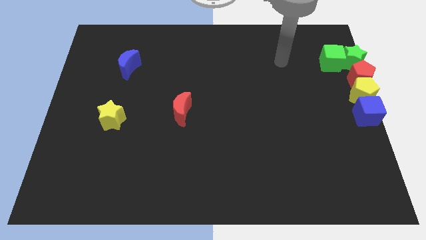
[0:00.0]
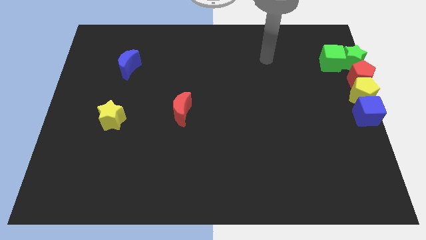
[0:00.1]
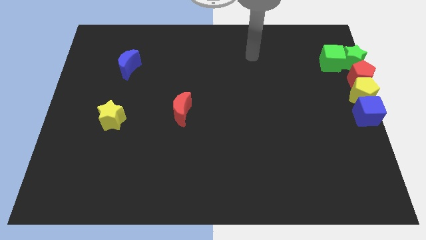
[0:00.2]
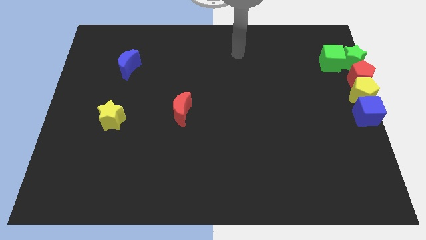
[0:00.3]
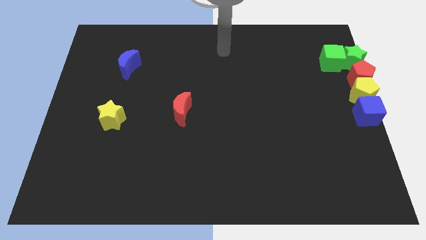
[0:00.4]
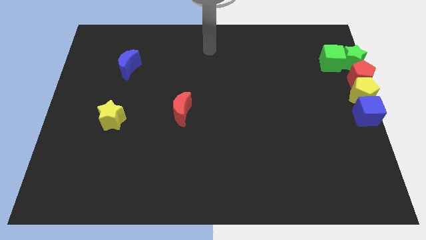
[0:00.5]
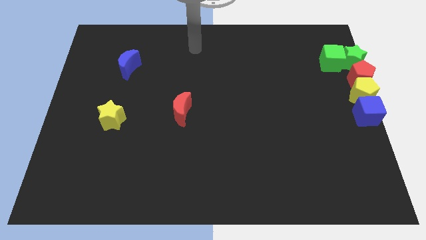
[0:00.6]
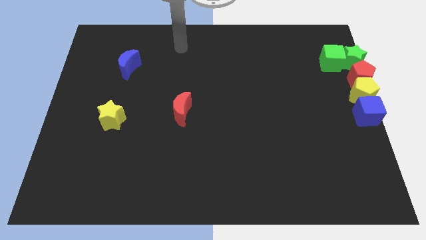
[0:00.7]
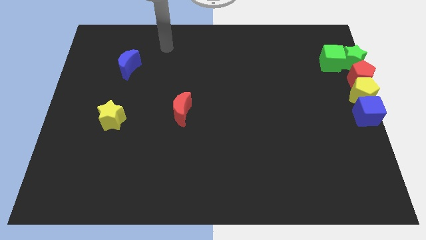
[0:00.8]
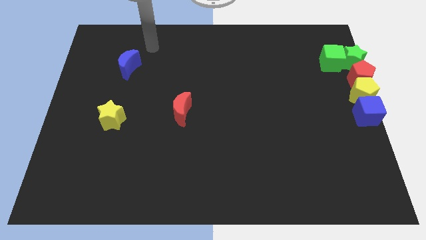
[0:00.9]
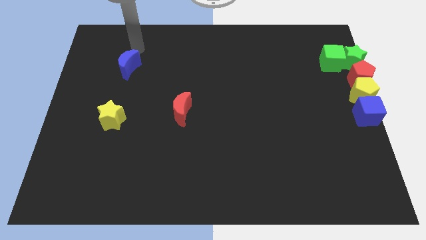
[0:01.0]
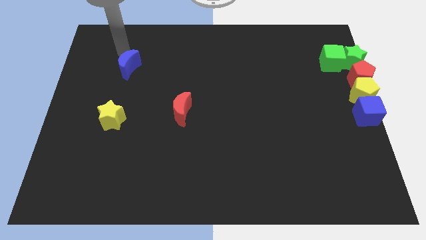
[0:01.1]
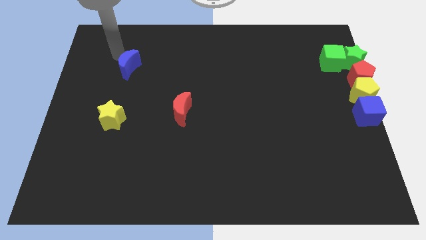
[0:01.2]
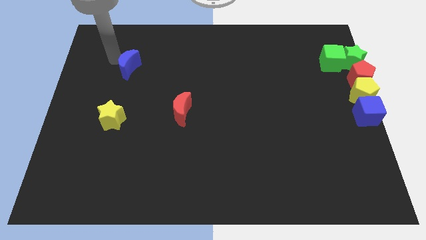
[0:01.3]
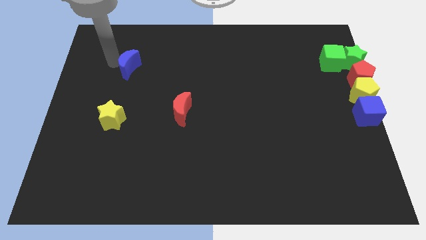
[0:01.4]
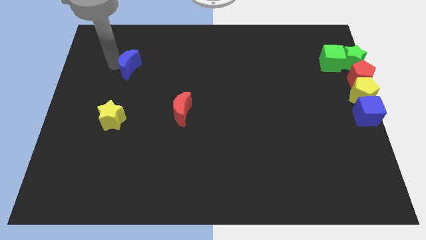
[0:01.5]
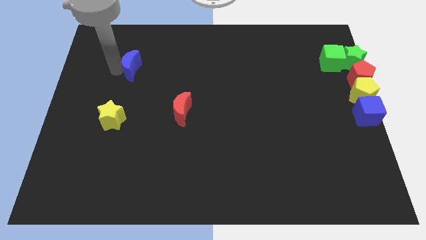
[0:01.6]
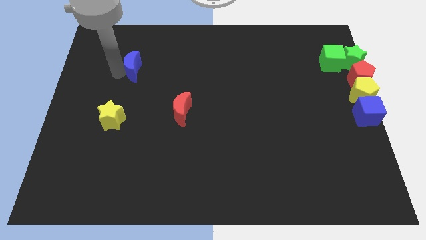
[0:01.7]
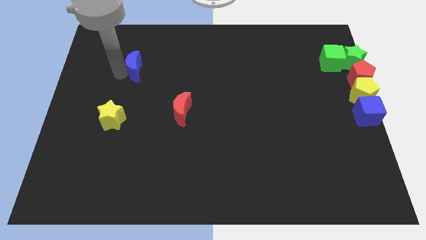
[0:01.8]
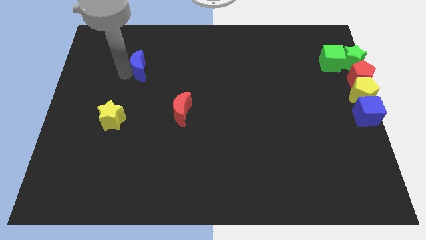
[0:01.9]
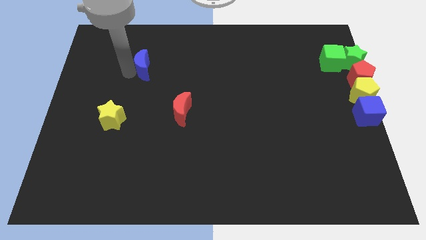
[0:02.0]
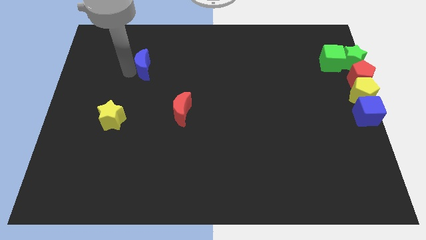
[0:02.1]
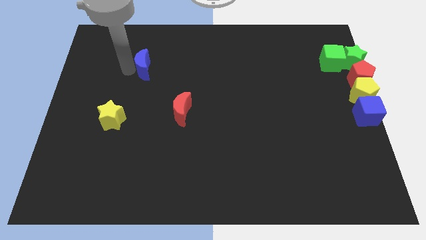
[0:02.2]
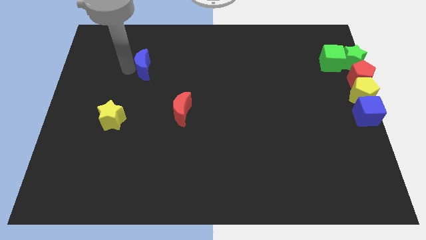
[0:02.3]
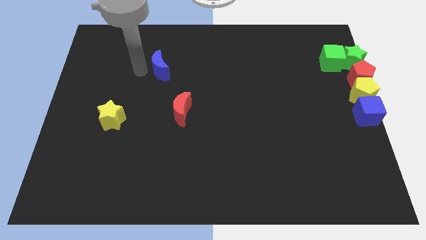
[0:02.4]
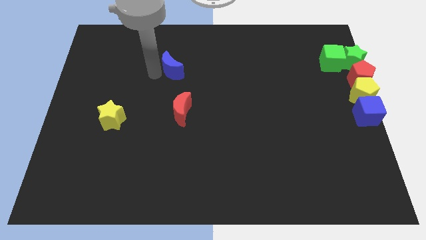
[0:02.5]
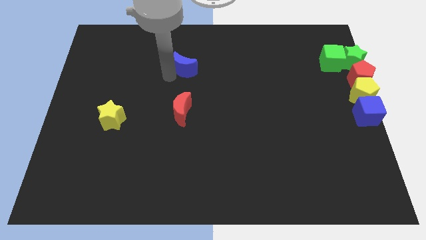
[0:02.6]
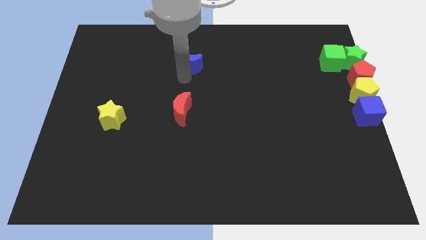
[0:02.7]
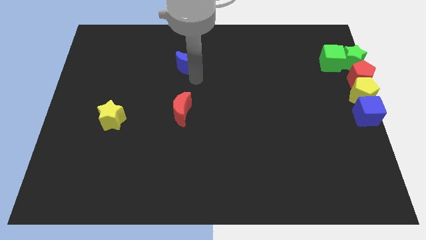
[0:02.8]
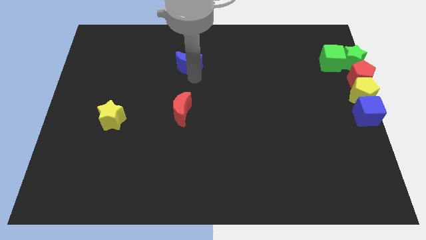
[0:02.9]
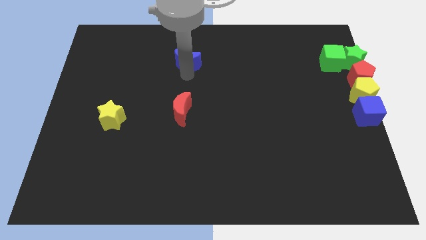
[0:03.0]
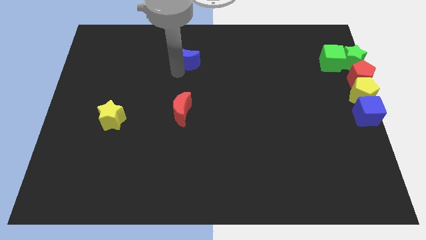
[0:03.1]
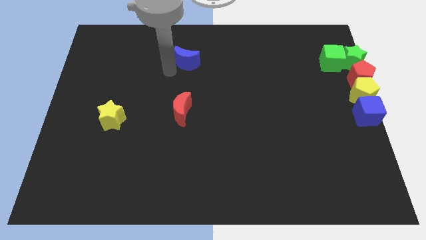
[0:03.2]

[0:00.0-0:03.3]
put the blue crescent above the red moon

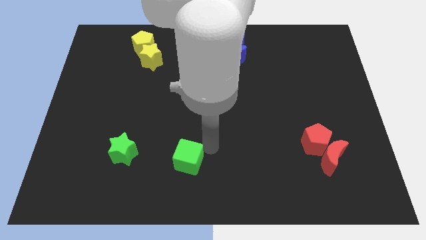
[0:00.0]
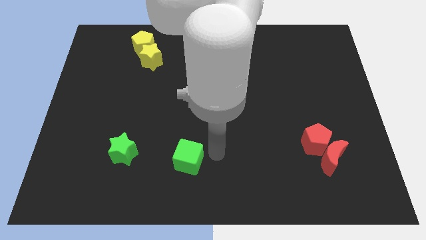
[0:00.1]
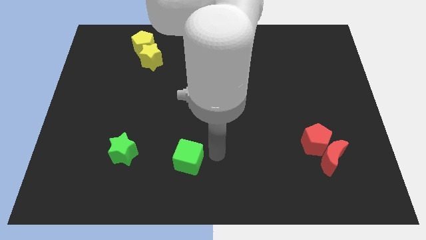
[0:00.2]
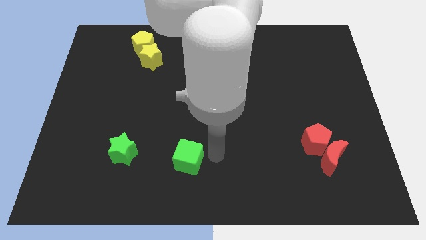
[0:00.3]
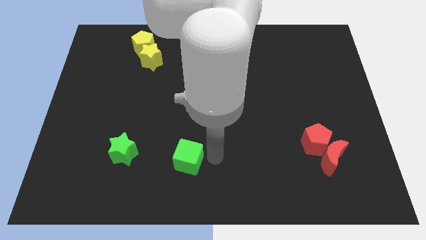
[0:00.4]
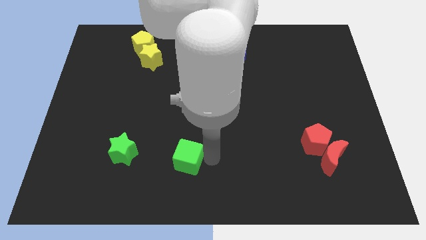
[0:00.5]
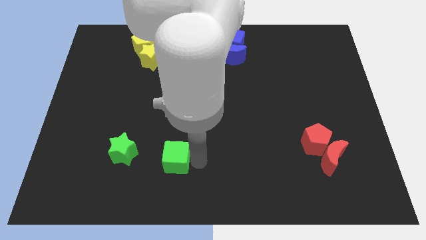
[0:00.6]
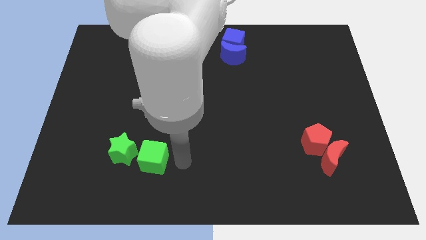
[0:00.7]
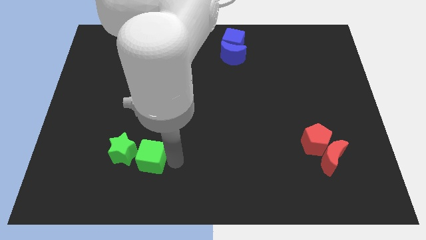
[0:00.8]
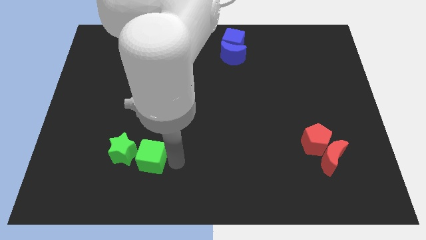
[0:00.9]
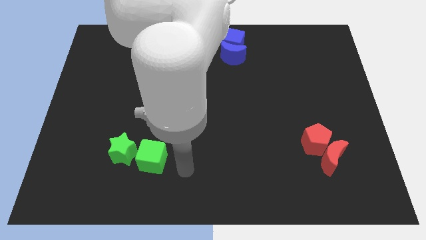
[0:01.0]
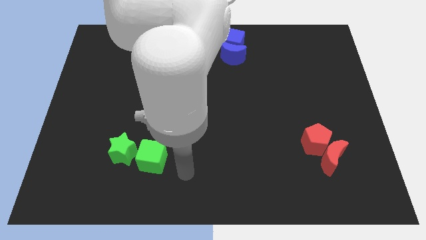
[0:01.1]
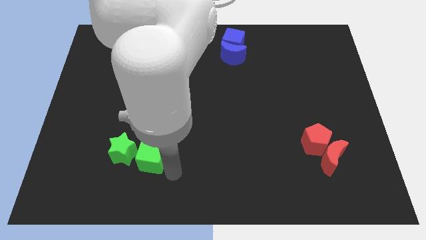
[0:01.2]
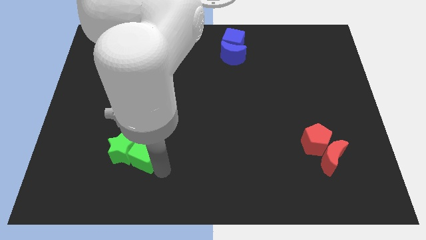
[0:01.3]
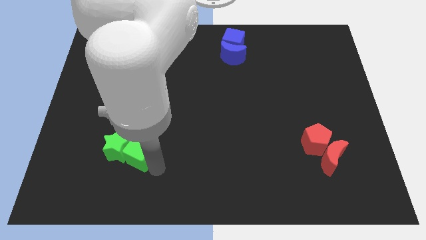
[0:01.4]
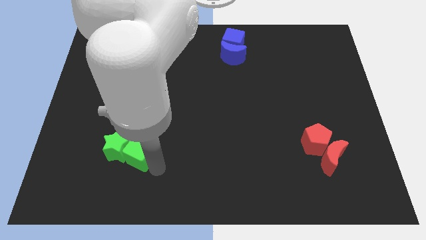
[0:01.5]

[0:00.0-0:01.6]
move green cube close to the green star

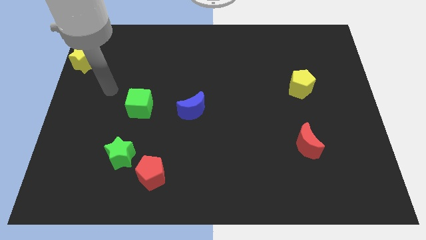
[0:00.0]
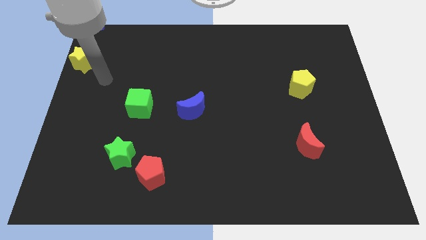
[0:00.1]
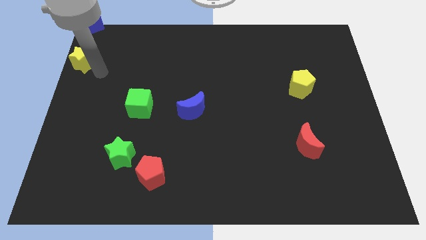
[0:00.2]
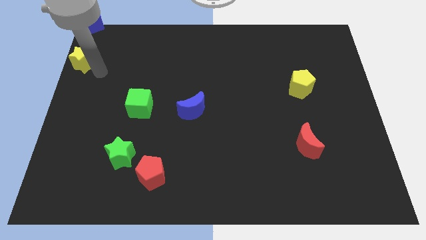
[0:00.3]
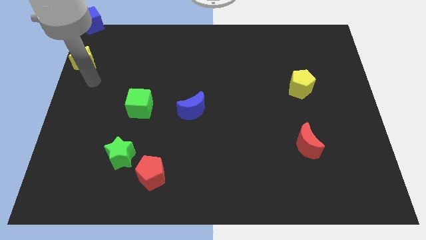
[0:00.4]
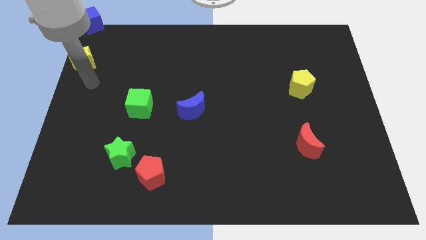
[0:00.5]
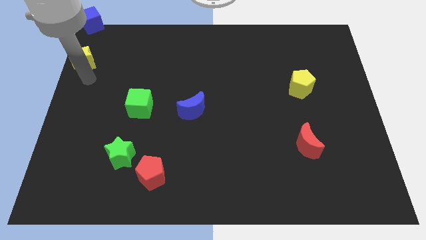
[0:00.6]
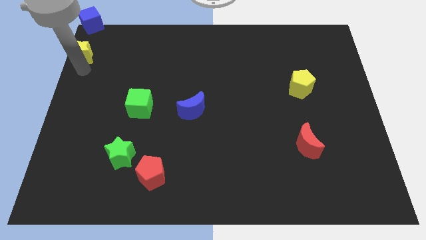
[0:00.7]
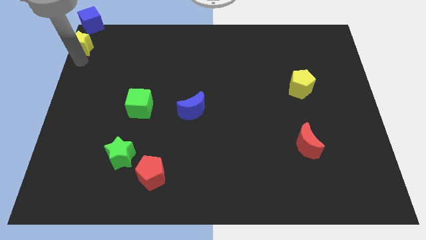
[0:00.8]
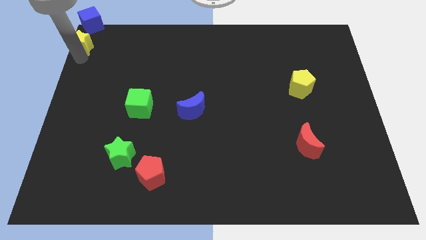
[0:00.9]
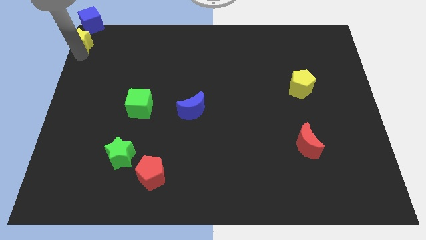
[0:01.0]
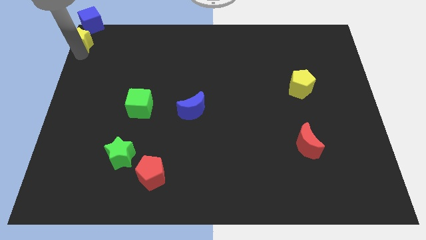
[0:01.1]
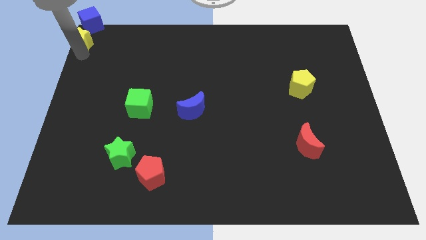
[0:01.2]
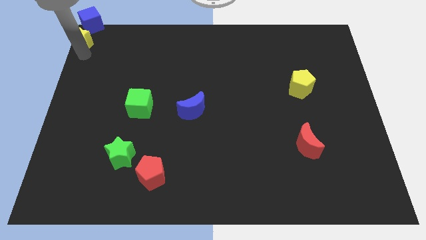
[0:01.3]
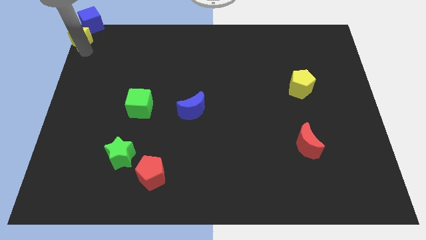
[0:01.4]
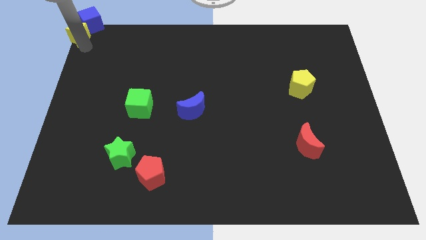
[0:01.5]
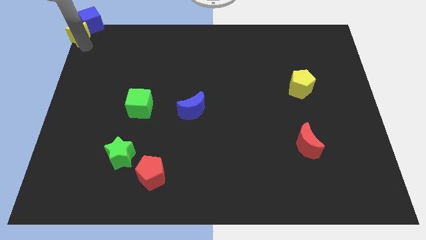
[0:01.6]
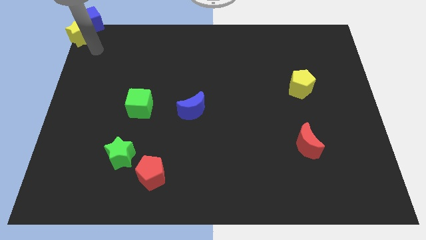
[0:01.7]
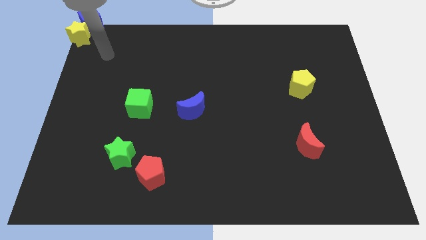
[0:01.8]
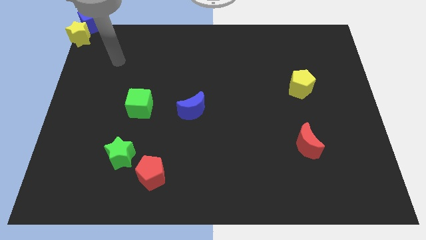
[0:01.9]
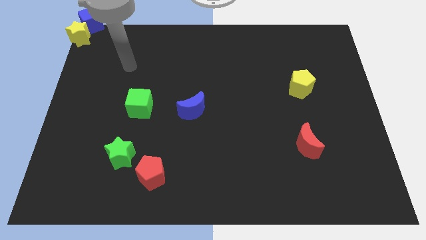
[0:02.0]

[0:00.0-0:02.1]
push the yellow star below into the blue cube

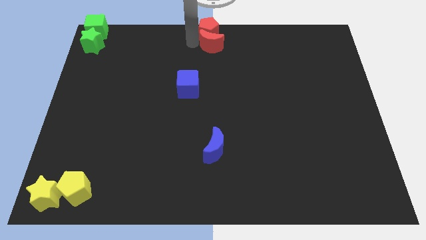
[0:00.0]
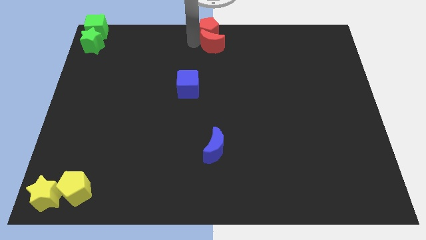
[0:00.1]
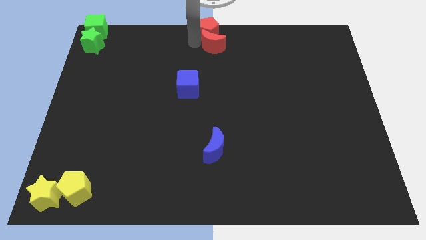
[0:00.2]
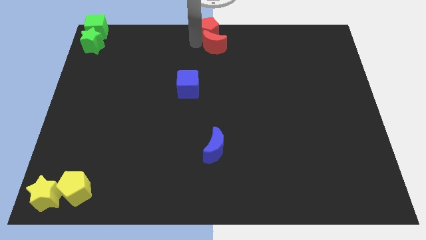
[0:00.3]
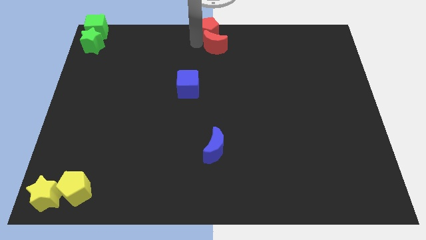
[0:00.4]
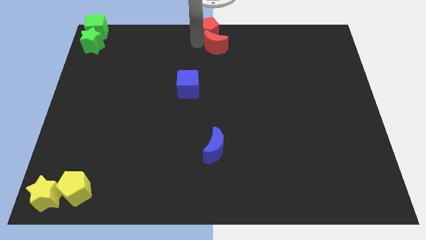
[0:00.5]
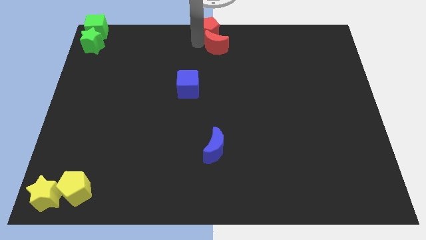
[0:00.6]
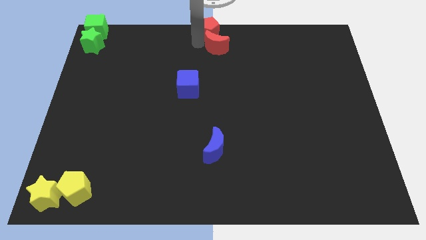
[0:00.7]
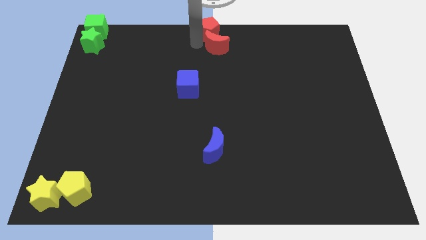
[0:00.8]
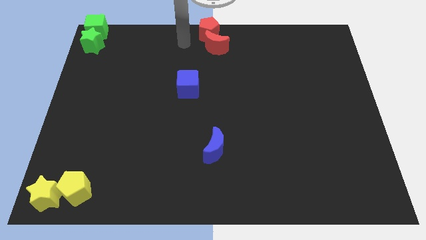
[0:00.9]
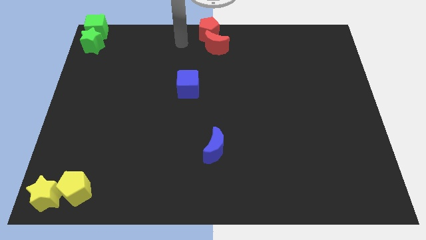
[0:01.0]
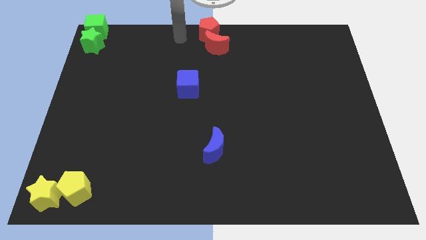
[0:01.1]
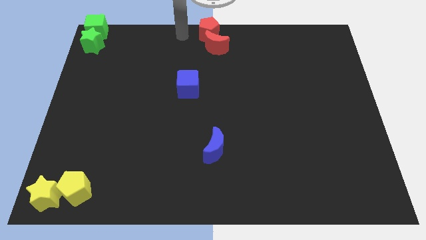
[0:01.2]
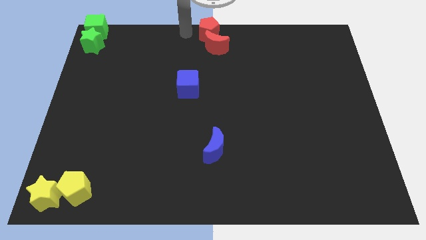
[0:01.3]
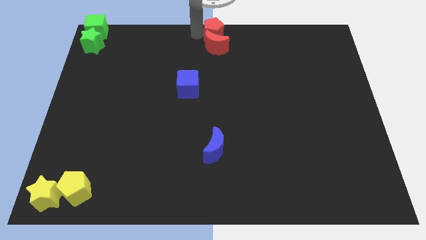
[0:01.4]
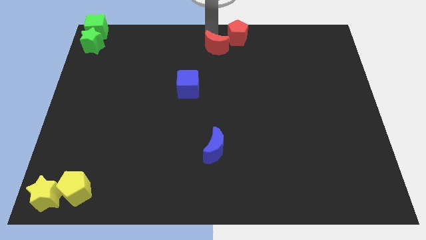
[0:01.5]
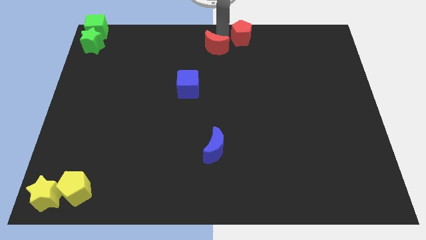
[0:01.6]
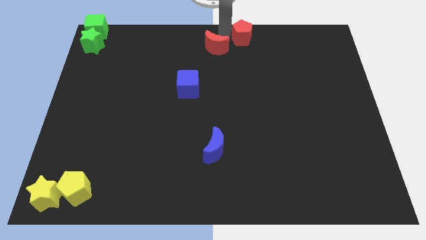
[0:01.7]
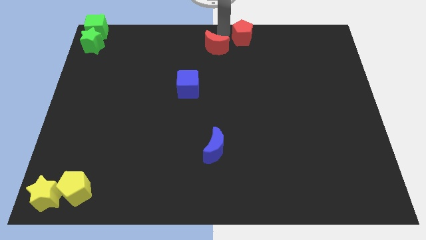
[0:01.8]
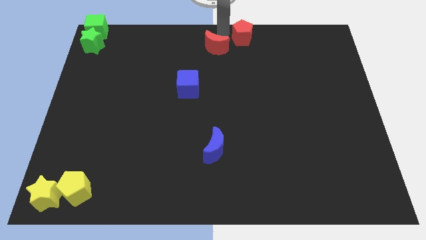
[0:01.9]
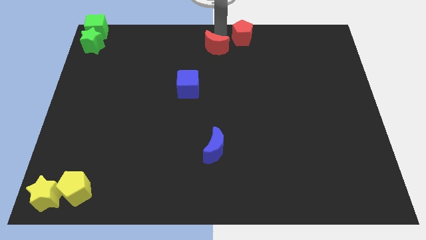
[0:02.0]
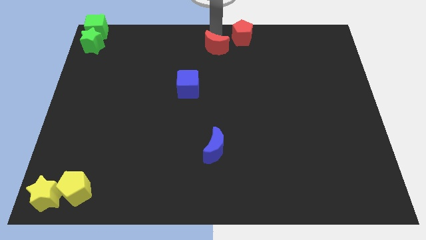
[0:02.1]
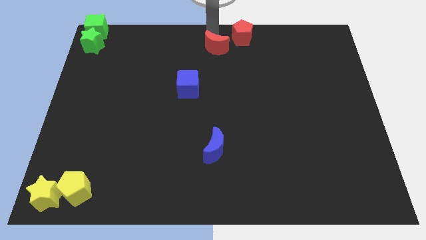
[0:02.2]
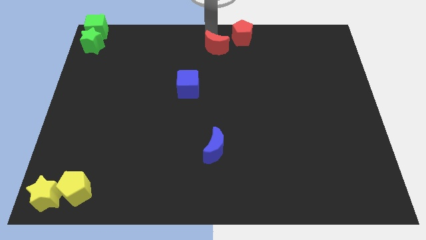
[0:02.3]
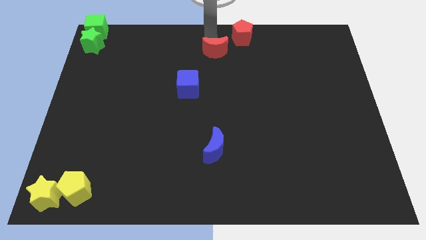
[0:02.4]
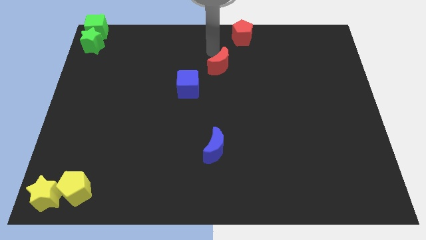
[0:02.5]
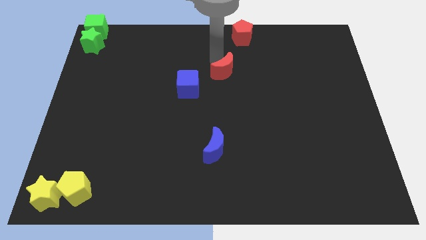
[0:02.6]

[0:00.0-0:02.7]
separate the red crescent and pentagon from each other
